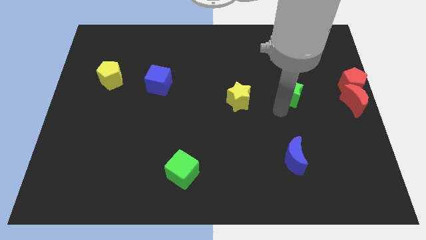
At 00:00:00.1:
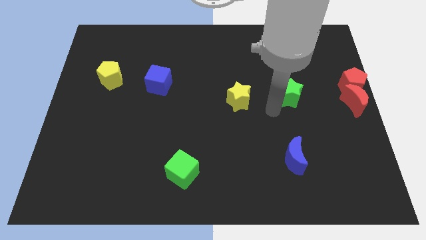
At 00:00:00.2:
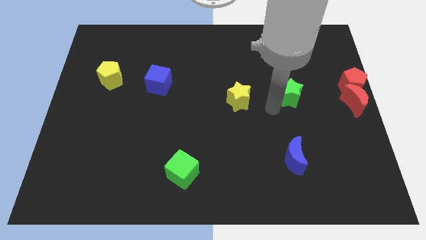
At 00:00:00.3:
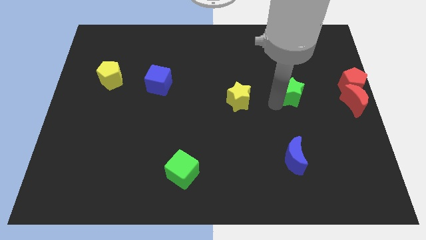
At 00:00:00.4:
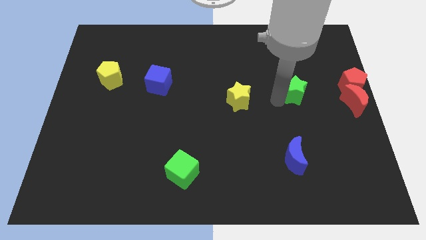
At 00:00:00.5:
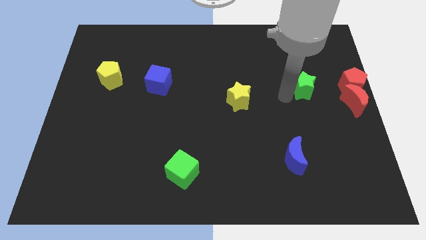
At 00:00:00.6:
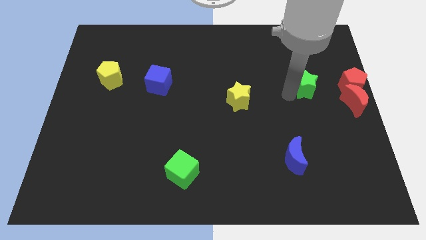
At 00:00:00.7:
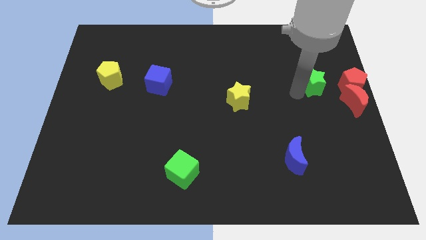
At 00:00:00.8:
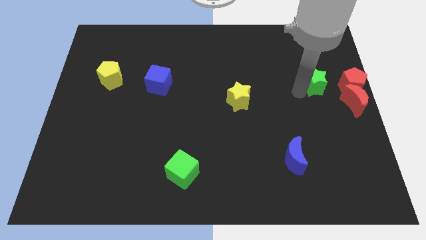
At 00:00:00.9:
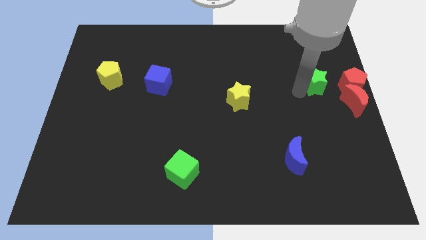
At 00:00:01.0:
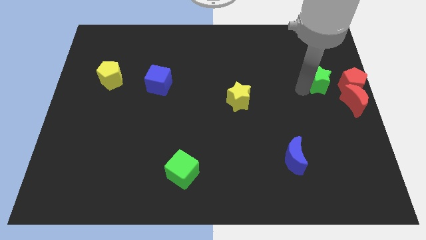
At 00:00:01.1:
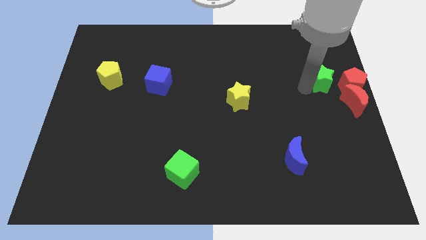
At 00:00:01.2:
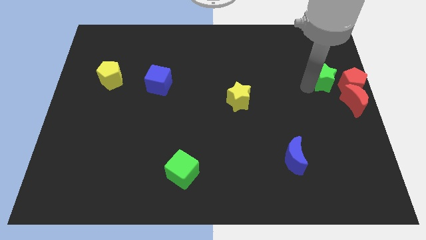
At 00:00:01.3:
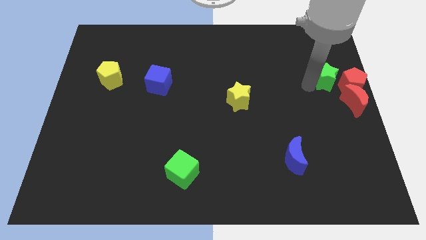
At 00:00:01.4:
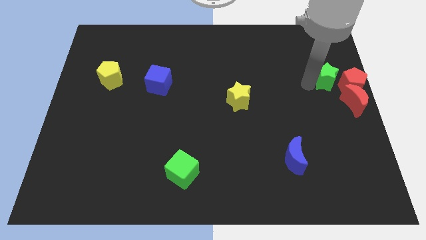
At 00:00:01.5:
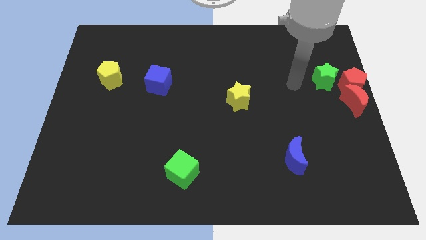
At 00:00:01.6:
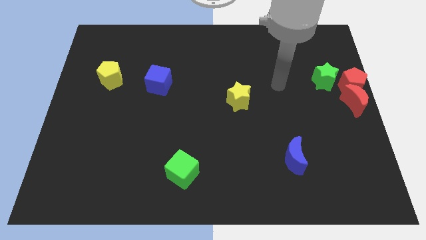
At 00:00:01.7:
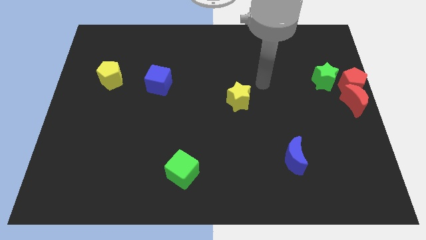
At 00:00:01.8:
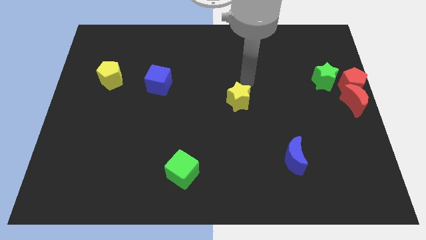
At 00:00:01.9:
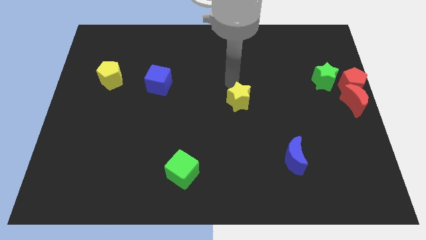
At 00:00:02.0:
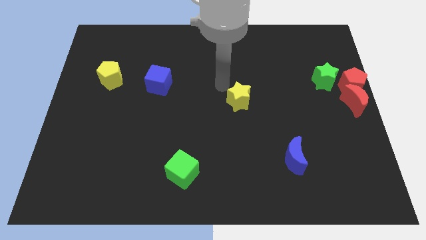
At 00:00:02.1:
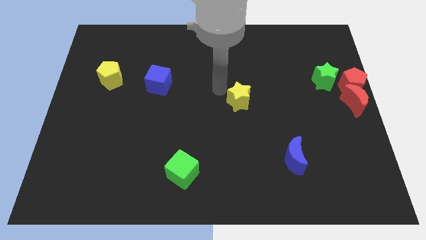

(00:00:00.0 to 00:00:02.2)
move green star towards red pentagon

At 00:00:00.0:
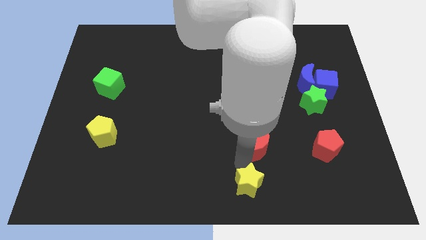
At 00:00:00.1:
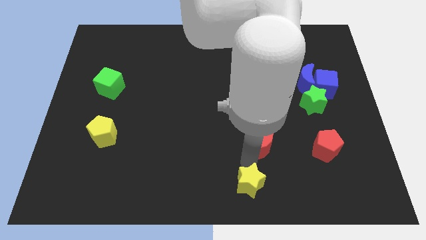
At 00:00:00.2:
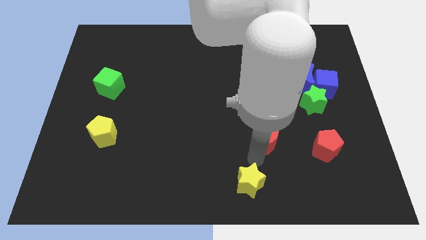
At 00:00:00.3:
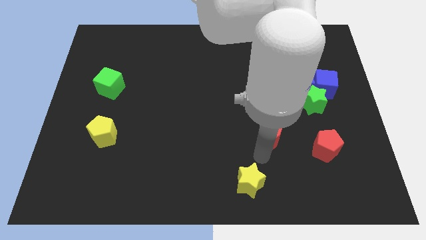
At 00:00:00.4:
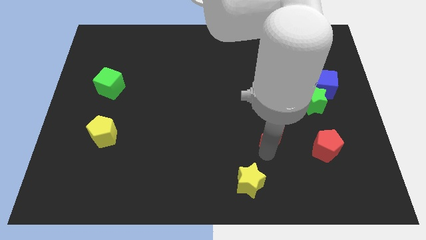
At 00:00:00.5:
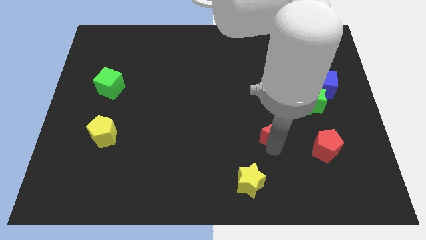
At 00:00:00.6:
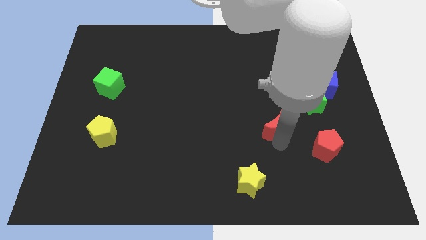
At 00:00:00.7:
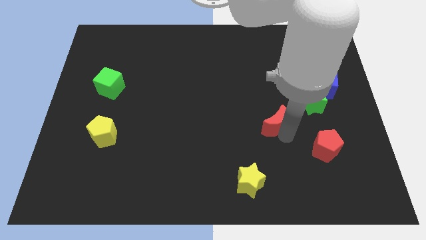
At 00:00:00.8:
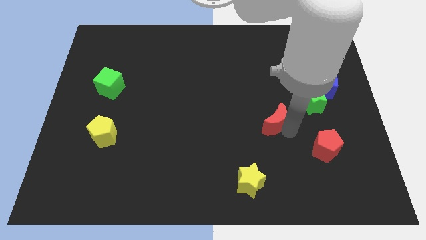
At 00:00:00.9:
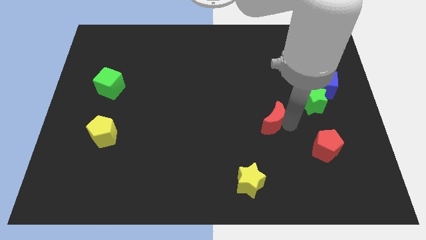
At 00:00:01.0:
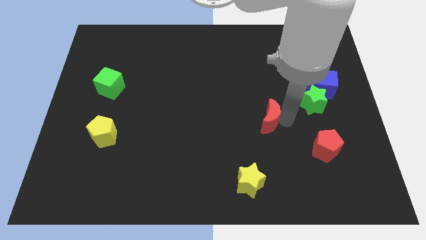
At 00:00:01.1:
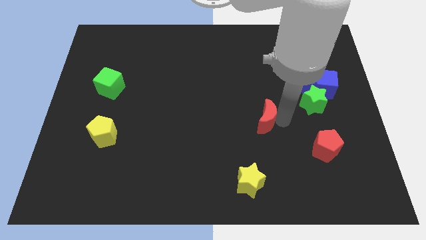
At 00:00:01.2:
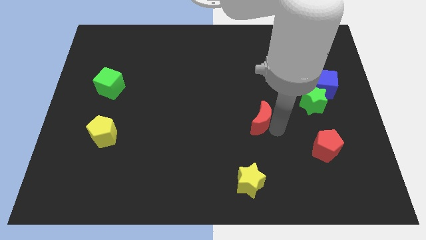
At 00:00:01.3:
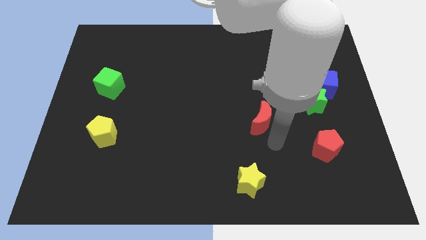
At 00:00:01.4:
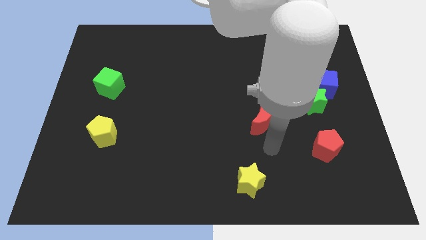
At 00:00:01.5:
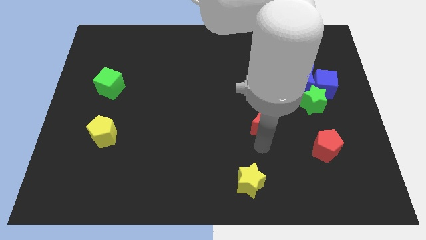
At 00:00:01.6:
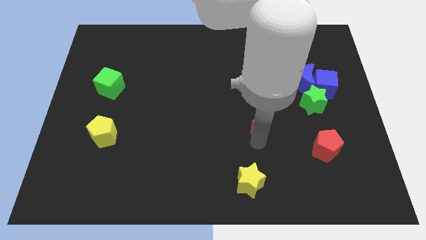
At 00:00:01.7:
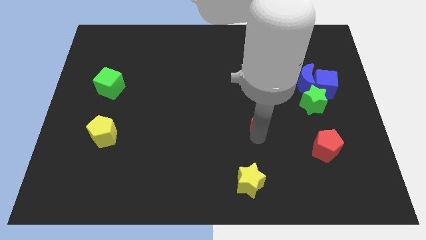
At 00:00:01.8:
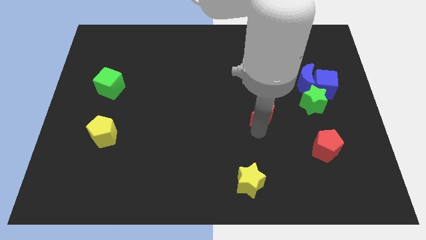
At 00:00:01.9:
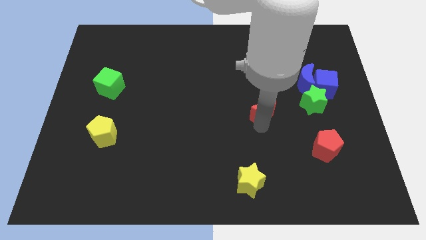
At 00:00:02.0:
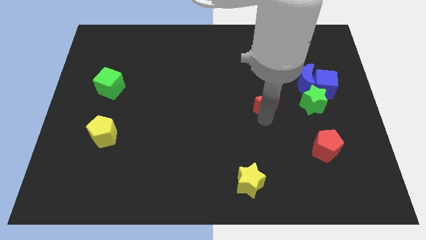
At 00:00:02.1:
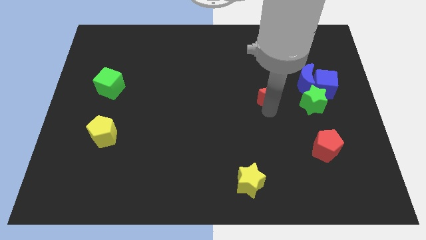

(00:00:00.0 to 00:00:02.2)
place the red crescent to the left of the green star

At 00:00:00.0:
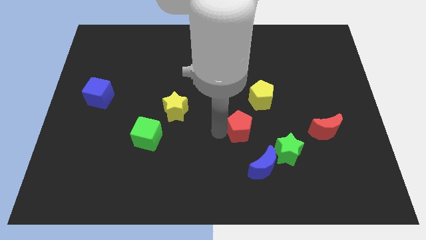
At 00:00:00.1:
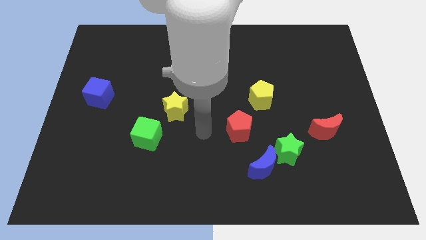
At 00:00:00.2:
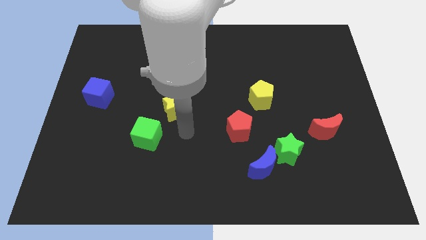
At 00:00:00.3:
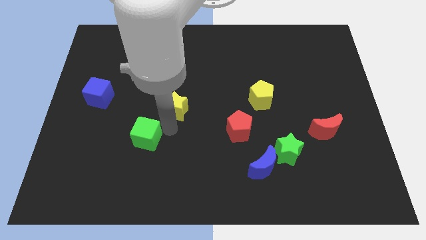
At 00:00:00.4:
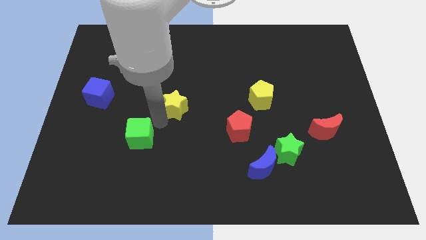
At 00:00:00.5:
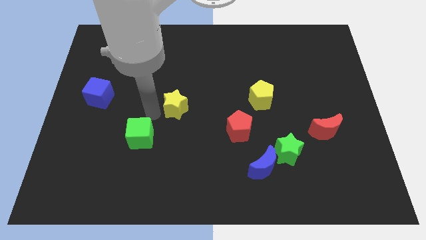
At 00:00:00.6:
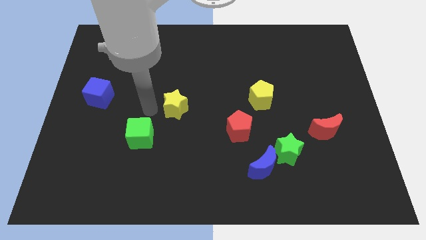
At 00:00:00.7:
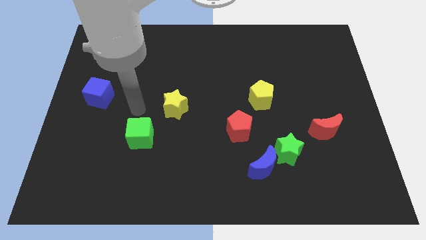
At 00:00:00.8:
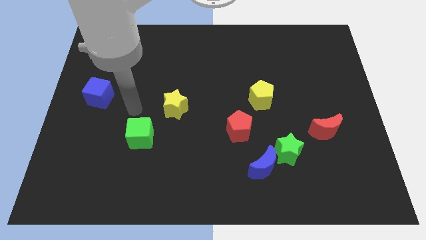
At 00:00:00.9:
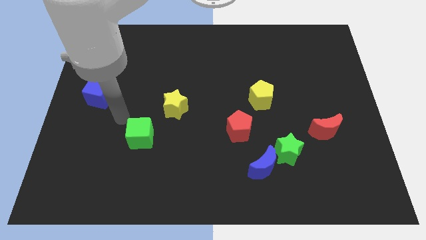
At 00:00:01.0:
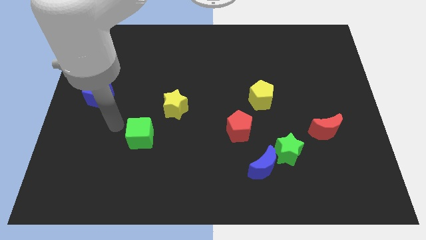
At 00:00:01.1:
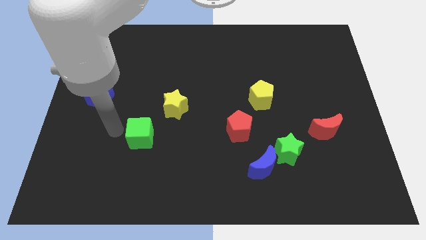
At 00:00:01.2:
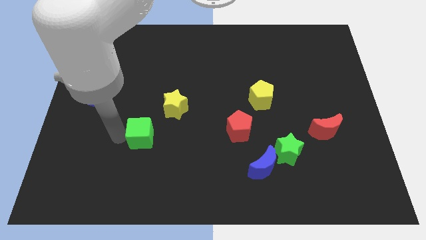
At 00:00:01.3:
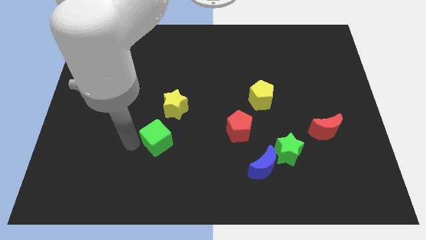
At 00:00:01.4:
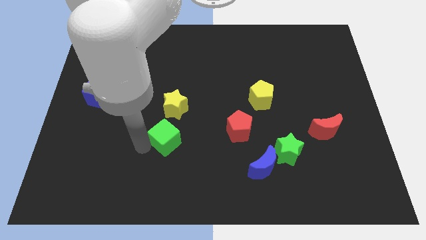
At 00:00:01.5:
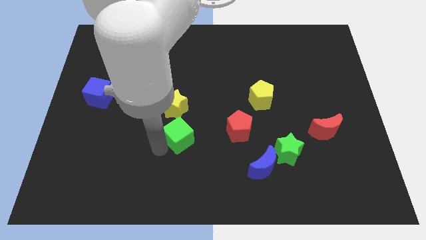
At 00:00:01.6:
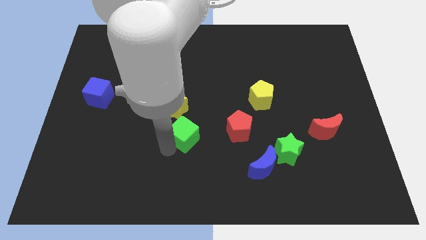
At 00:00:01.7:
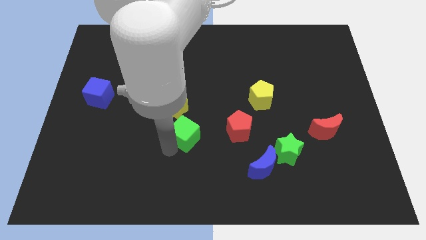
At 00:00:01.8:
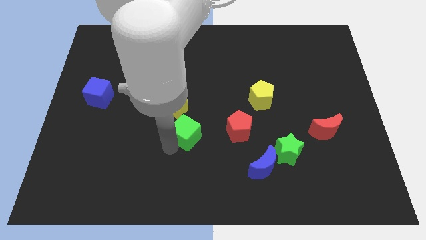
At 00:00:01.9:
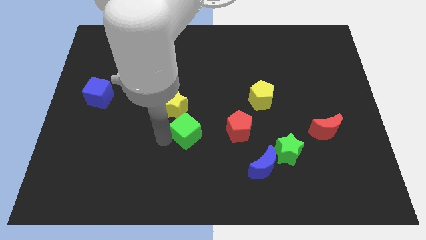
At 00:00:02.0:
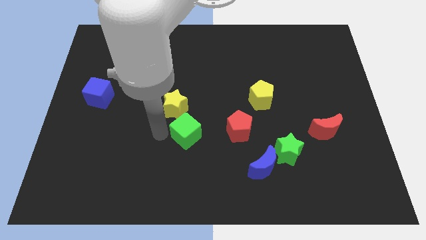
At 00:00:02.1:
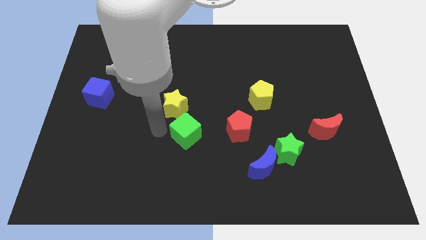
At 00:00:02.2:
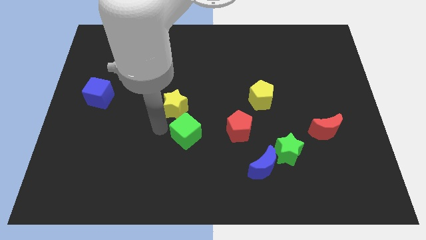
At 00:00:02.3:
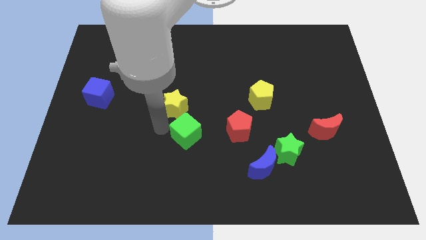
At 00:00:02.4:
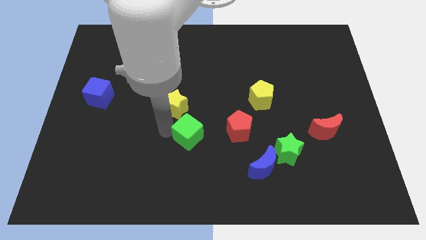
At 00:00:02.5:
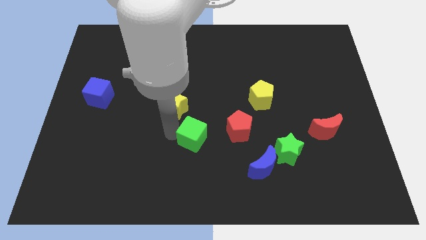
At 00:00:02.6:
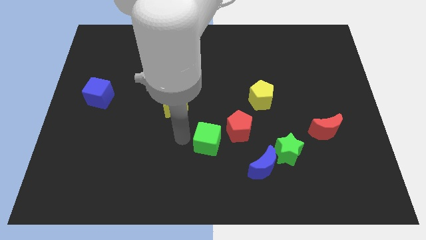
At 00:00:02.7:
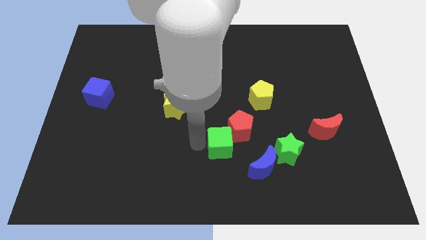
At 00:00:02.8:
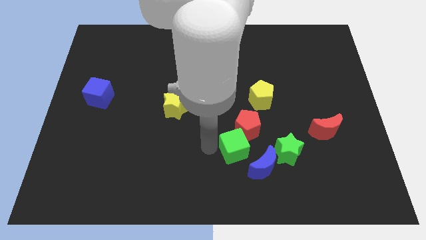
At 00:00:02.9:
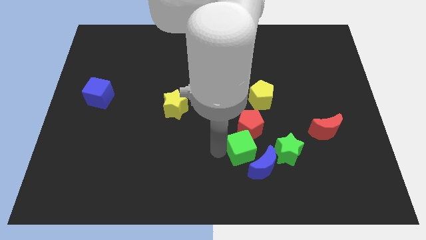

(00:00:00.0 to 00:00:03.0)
move the green cube left below the red pentagon

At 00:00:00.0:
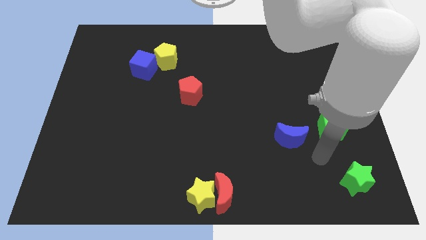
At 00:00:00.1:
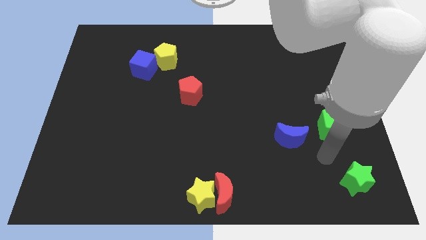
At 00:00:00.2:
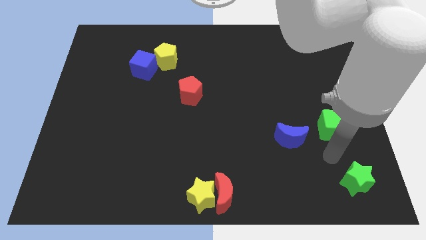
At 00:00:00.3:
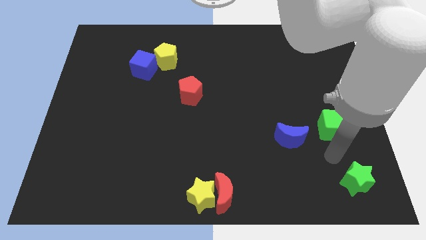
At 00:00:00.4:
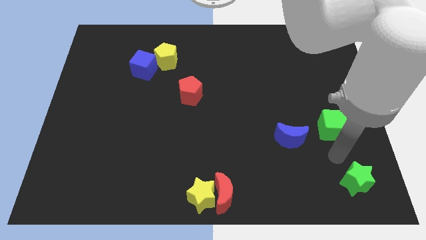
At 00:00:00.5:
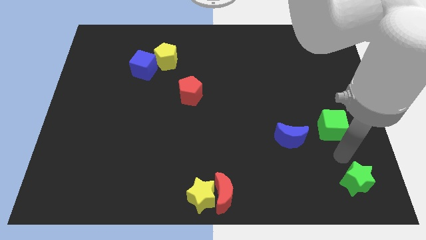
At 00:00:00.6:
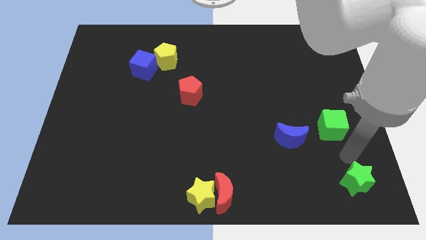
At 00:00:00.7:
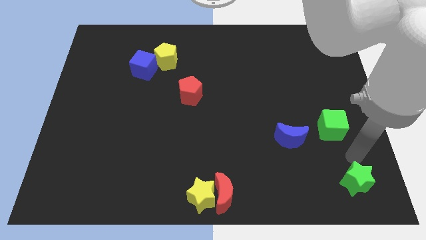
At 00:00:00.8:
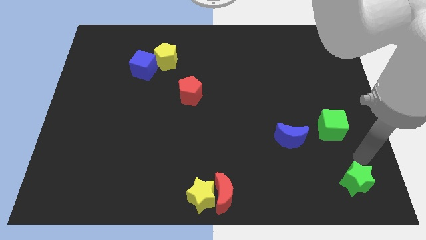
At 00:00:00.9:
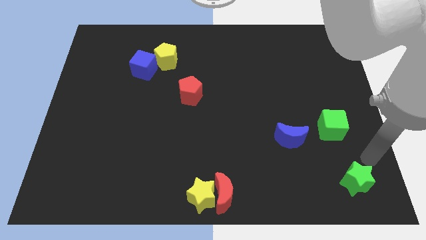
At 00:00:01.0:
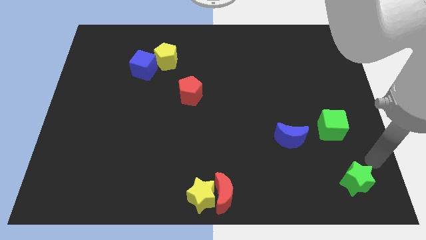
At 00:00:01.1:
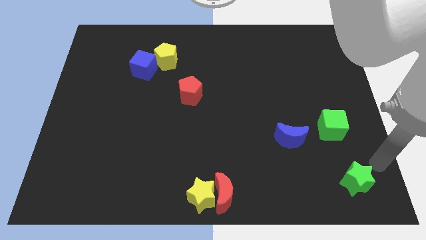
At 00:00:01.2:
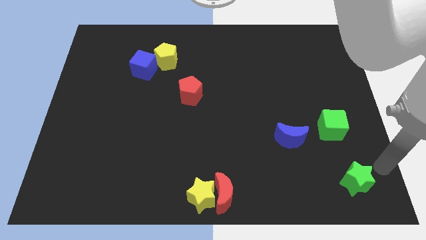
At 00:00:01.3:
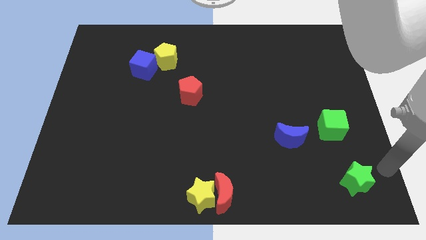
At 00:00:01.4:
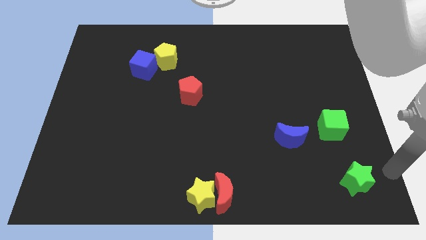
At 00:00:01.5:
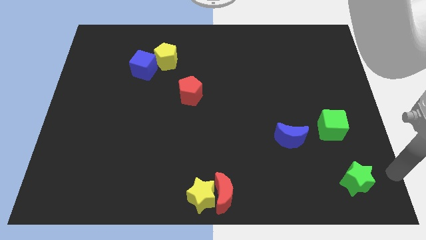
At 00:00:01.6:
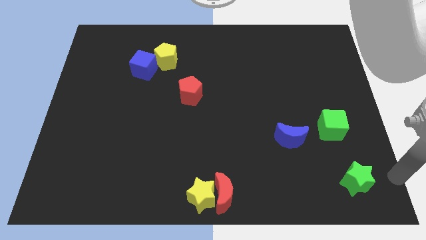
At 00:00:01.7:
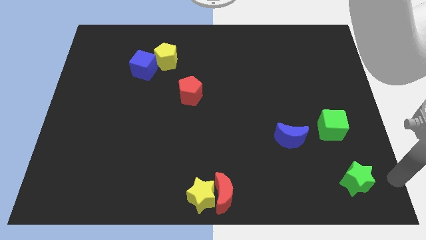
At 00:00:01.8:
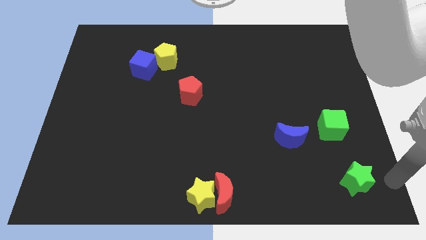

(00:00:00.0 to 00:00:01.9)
move your arm to the right bottom of the board
